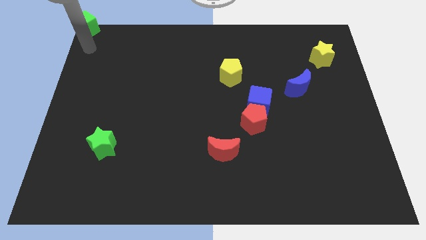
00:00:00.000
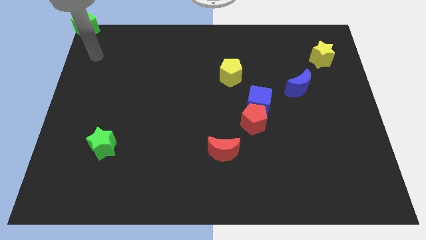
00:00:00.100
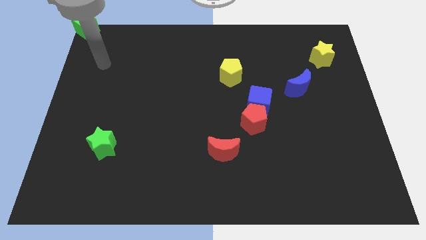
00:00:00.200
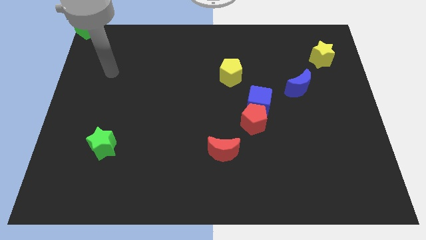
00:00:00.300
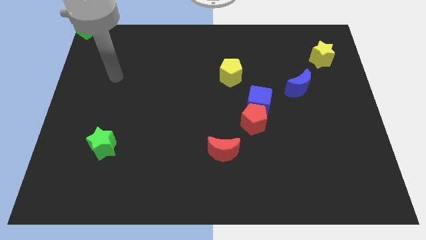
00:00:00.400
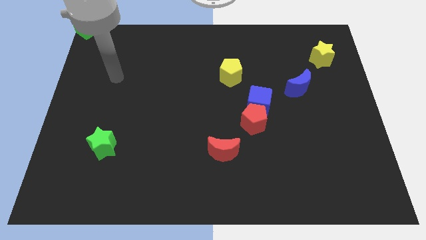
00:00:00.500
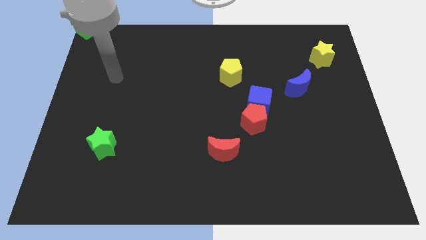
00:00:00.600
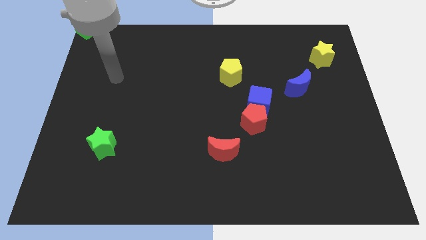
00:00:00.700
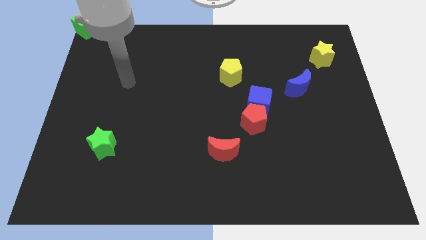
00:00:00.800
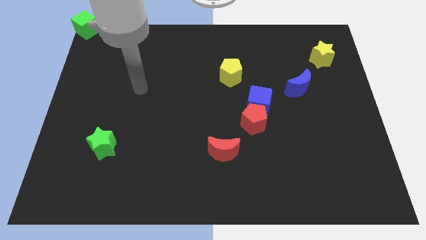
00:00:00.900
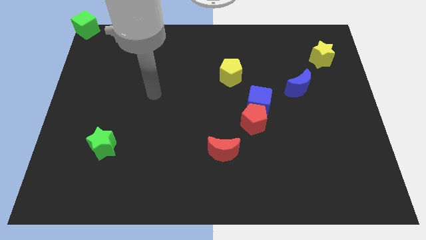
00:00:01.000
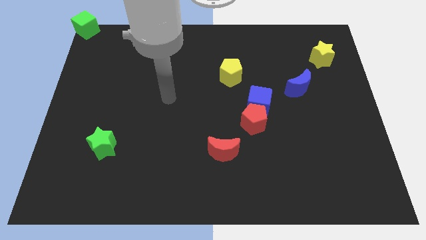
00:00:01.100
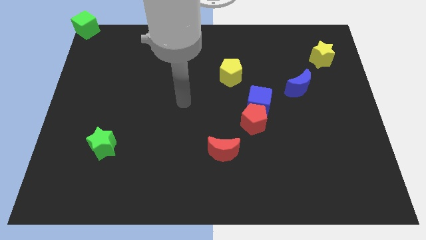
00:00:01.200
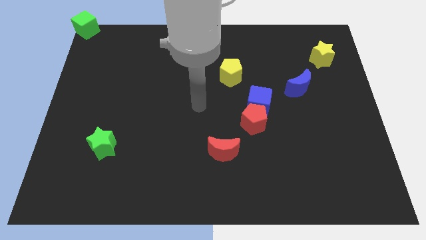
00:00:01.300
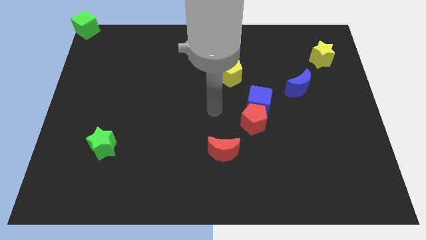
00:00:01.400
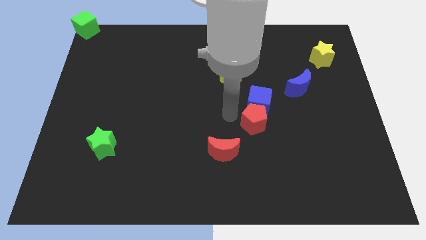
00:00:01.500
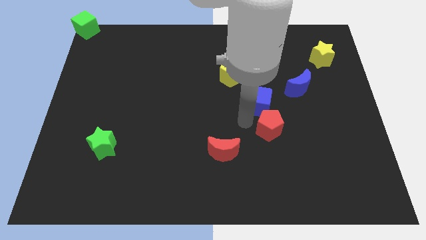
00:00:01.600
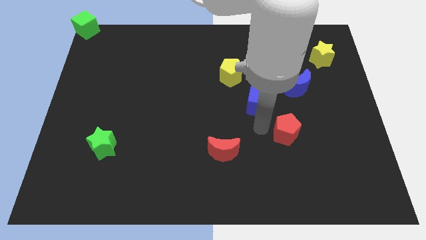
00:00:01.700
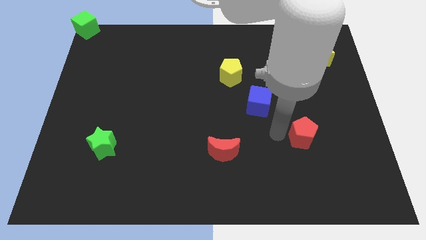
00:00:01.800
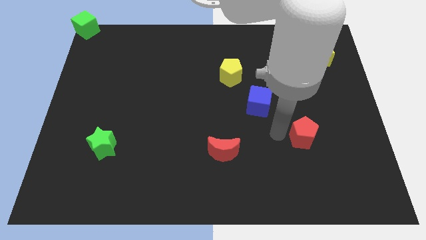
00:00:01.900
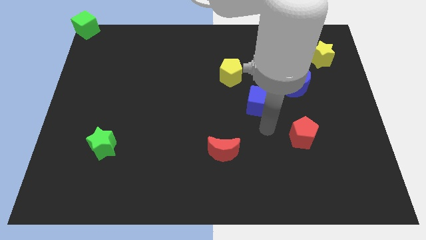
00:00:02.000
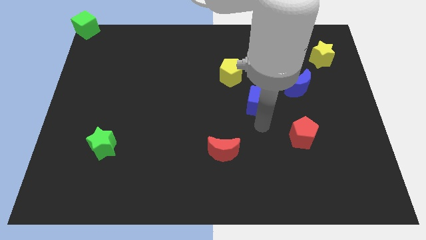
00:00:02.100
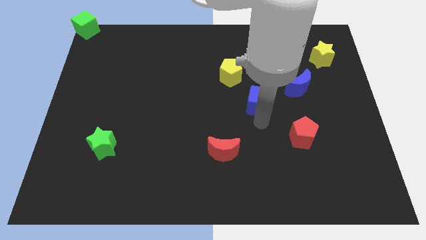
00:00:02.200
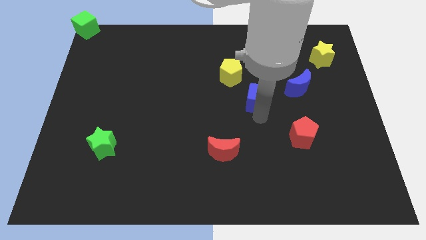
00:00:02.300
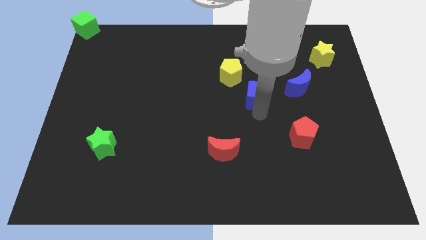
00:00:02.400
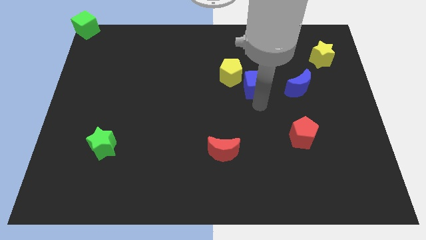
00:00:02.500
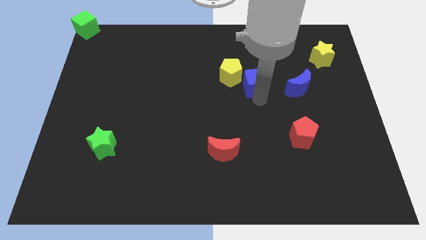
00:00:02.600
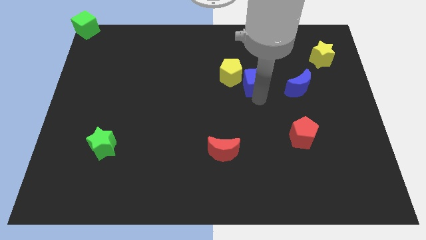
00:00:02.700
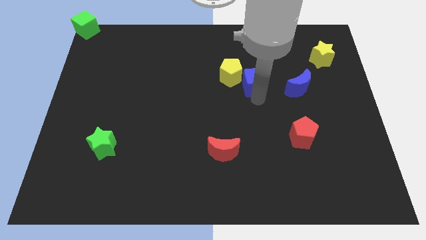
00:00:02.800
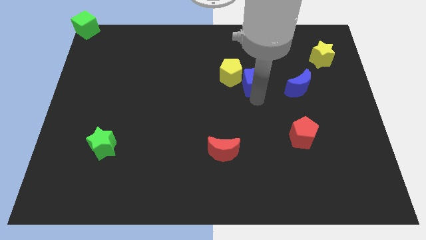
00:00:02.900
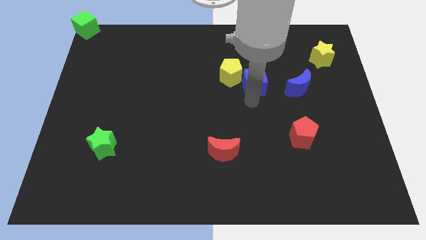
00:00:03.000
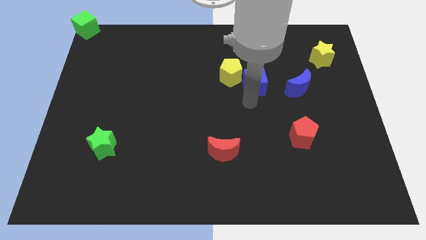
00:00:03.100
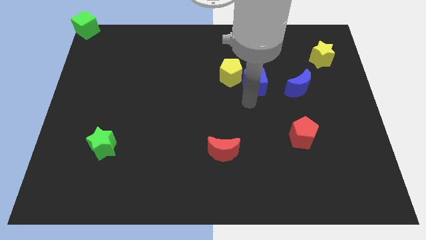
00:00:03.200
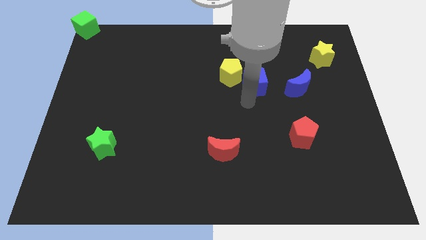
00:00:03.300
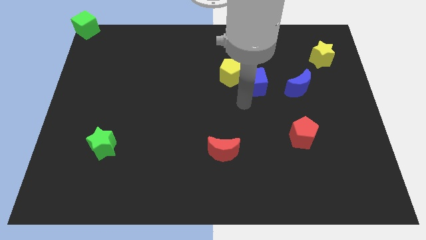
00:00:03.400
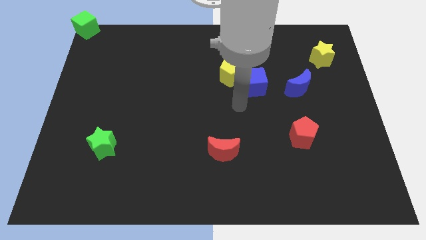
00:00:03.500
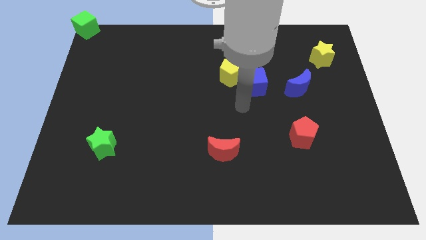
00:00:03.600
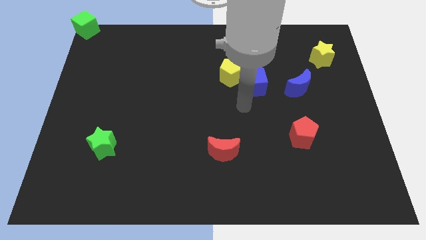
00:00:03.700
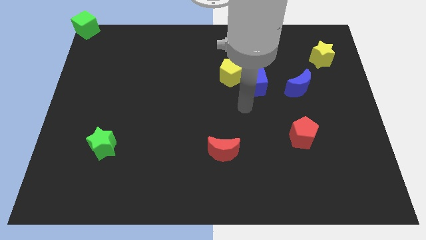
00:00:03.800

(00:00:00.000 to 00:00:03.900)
push the red pentagon to the center right

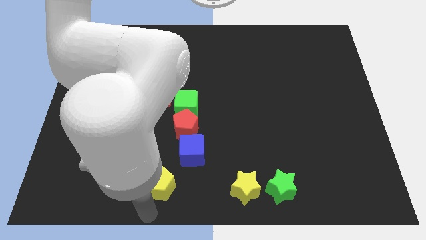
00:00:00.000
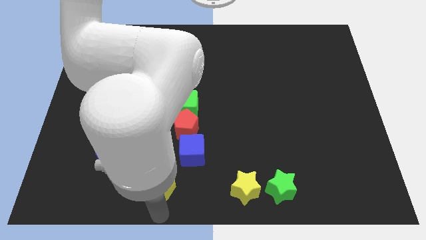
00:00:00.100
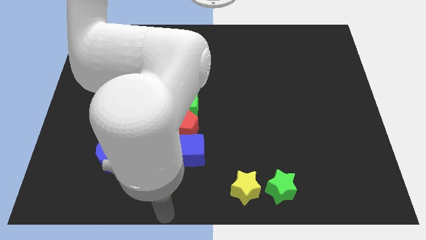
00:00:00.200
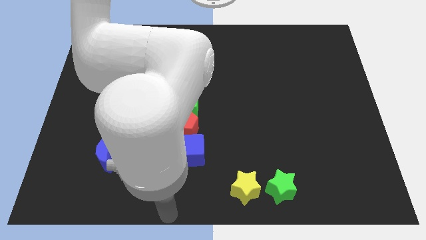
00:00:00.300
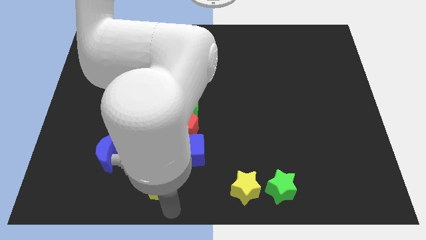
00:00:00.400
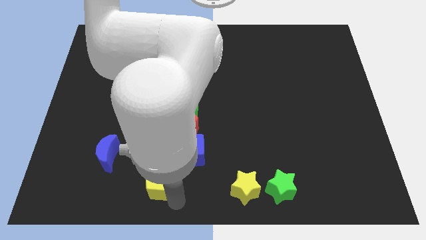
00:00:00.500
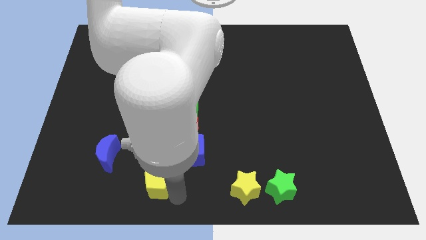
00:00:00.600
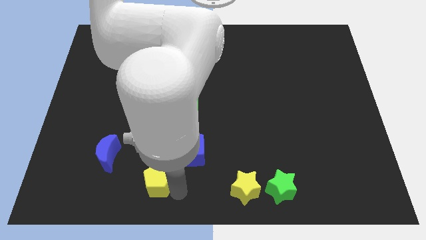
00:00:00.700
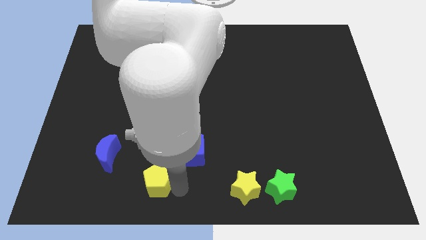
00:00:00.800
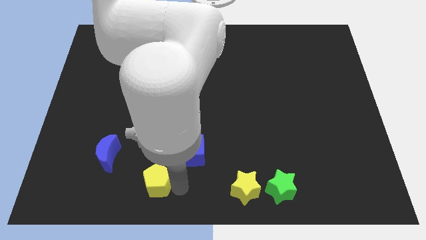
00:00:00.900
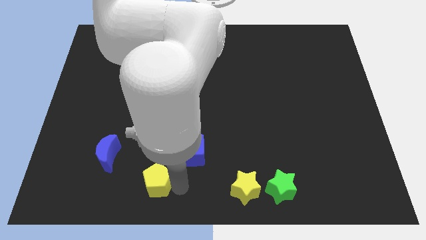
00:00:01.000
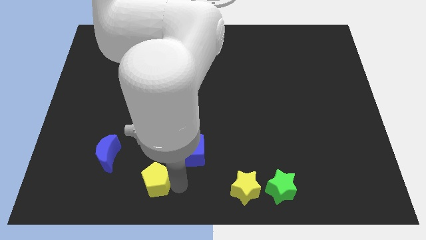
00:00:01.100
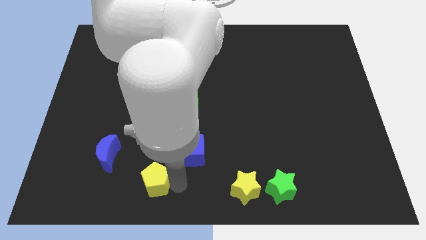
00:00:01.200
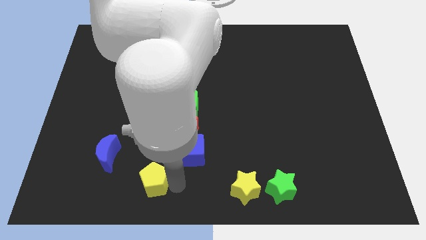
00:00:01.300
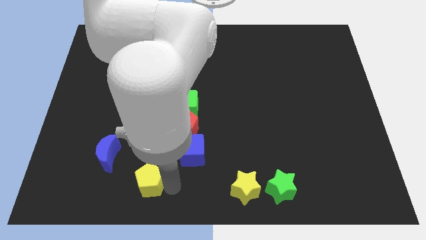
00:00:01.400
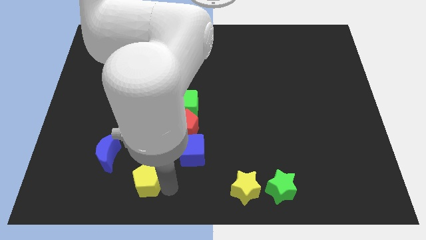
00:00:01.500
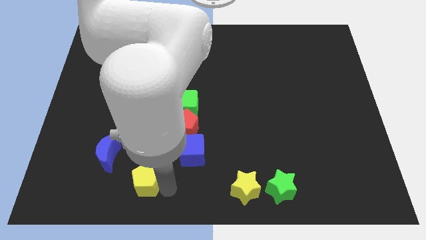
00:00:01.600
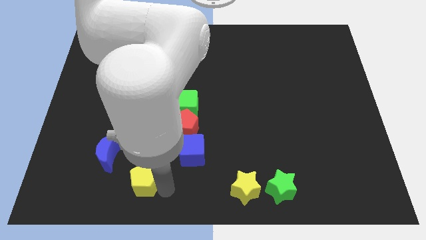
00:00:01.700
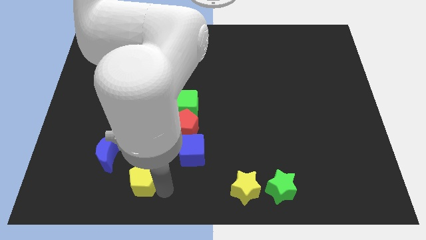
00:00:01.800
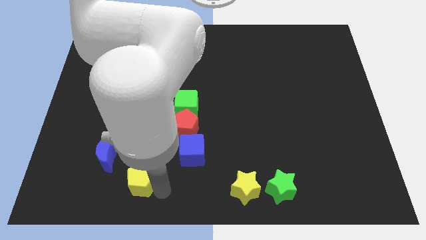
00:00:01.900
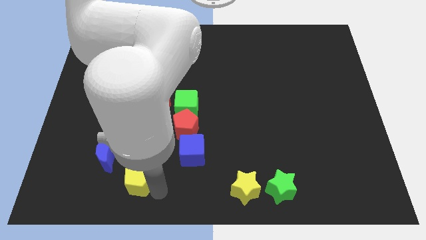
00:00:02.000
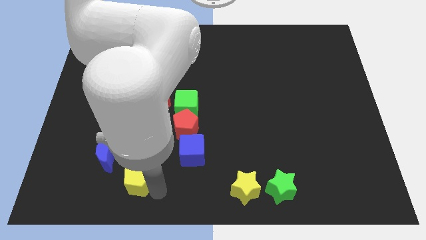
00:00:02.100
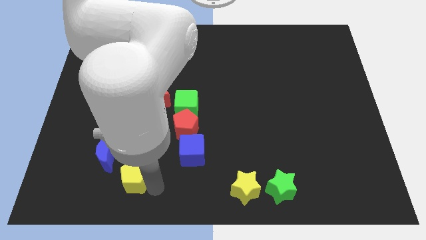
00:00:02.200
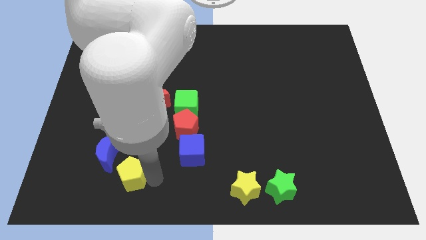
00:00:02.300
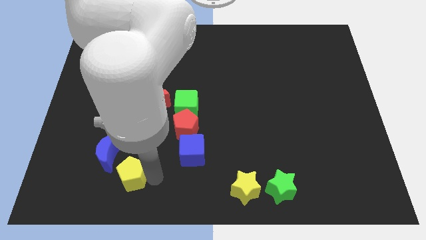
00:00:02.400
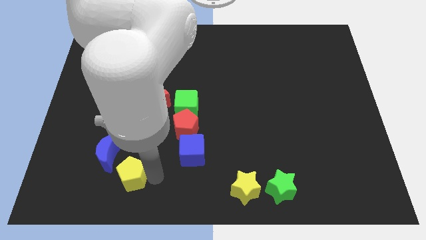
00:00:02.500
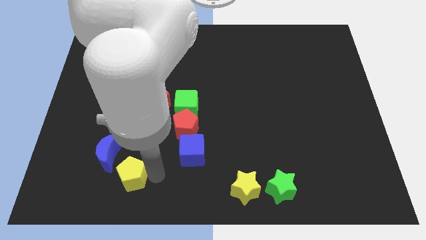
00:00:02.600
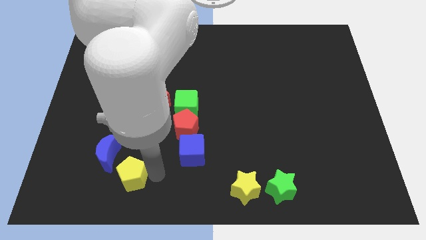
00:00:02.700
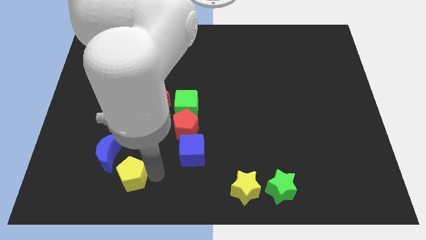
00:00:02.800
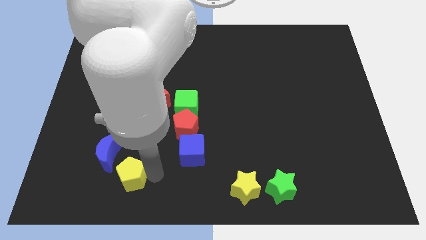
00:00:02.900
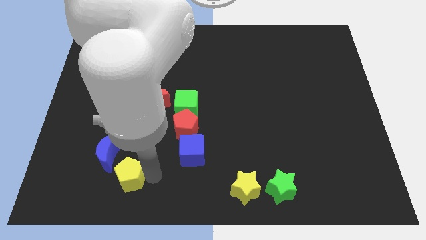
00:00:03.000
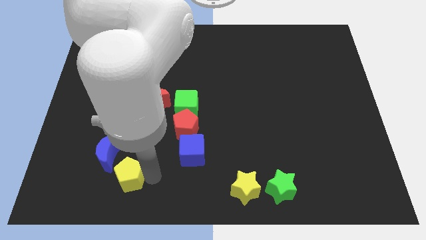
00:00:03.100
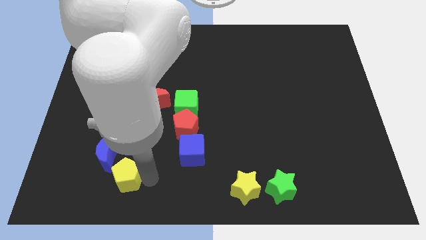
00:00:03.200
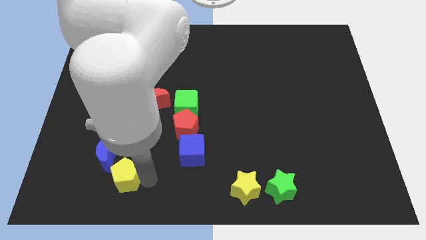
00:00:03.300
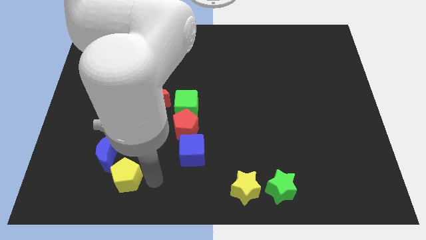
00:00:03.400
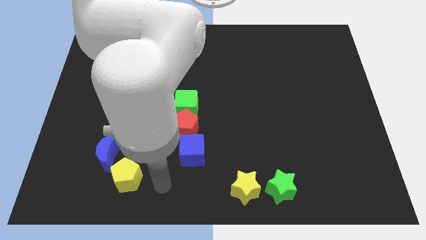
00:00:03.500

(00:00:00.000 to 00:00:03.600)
push yellow pentagon towards blue crescent

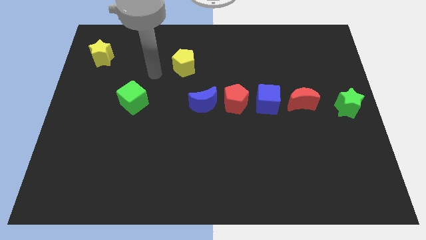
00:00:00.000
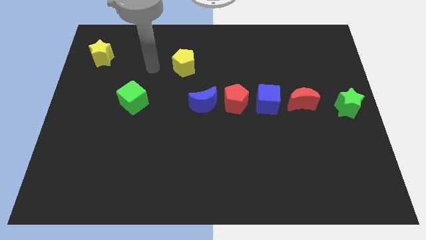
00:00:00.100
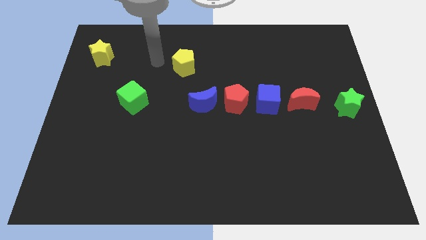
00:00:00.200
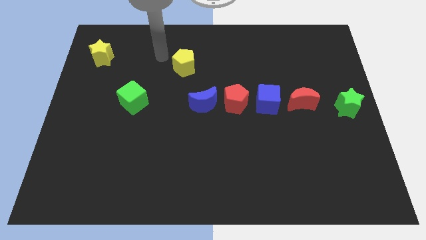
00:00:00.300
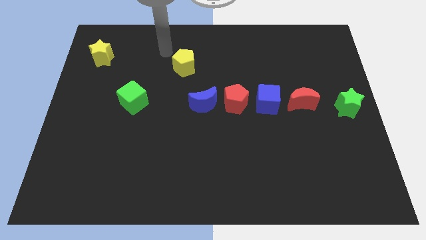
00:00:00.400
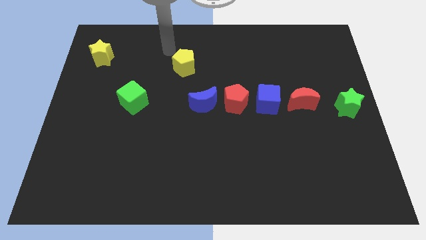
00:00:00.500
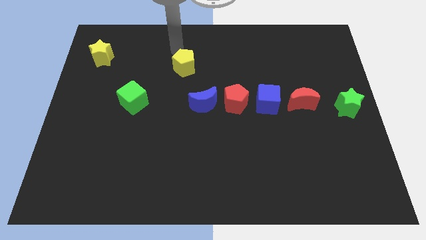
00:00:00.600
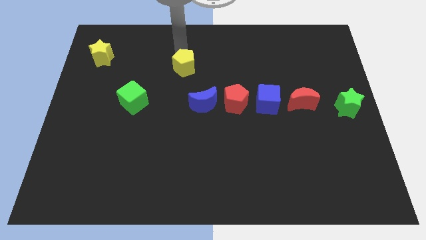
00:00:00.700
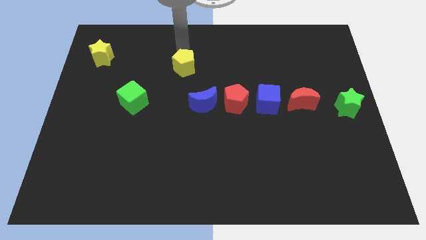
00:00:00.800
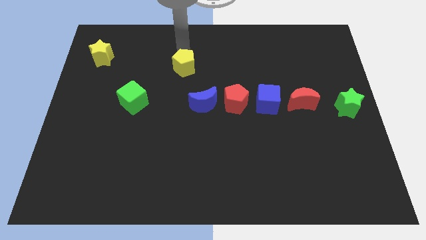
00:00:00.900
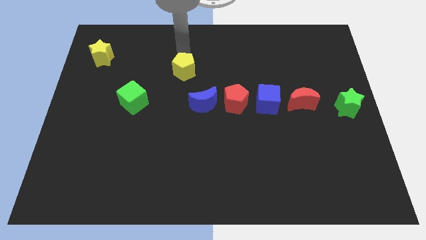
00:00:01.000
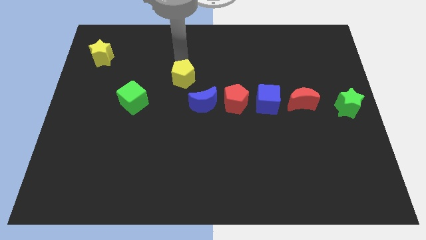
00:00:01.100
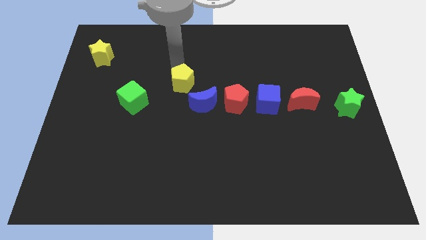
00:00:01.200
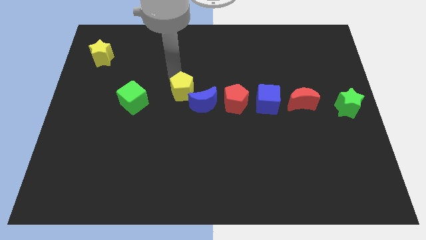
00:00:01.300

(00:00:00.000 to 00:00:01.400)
push the yellow pentagon close to blue moon

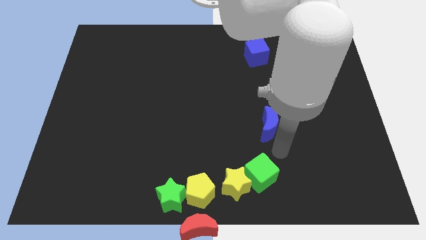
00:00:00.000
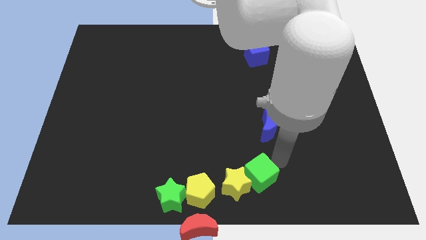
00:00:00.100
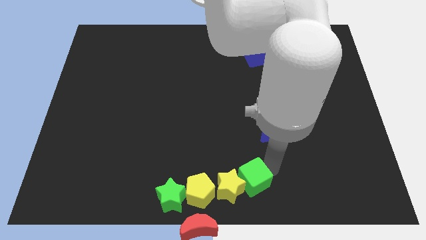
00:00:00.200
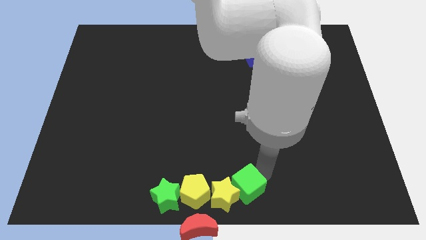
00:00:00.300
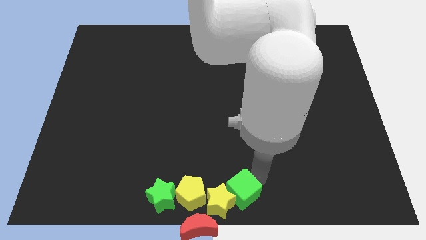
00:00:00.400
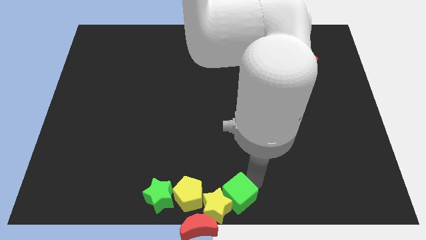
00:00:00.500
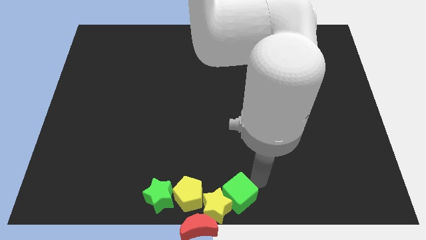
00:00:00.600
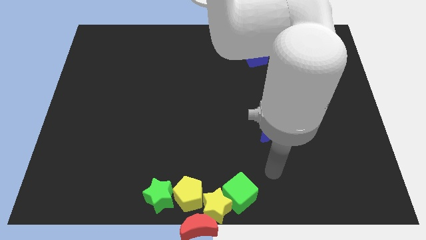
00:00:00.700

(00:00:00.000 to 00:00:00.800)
push the green cube along with the yellow star into the group of blocks
